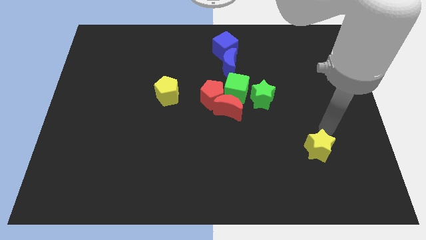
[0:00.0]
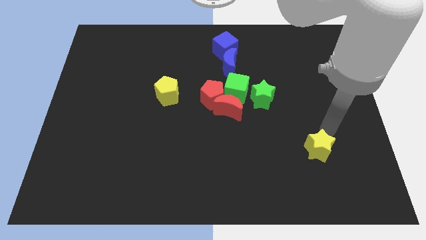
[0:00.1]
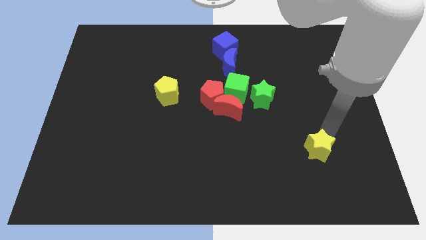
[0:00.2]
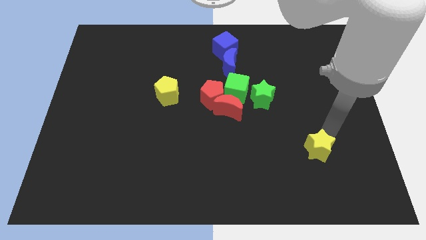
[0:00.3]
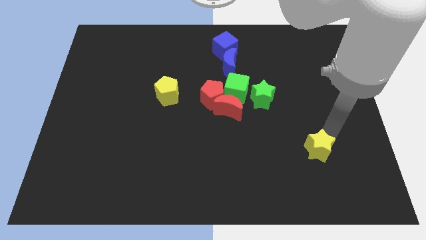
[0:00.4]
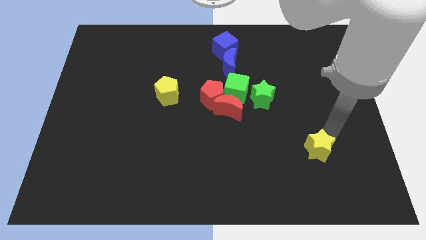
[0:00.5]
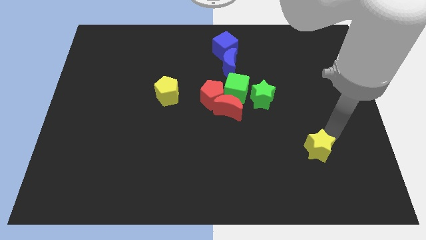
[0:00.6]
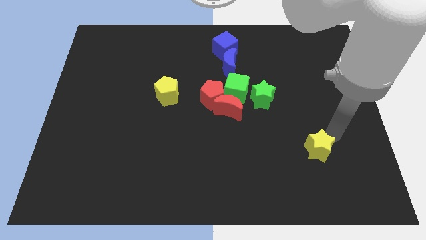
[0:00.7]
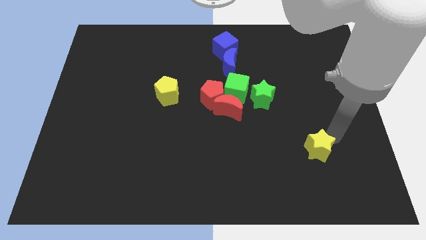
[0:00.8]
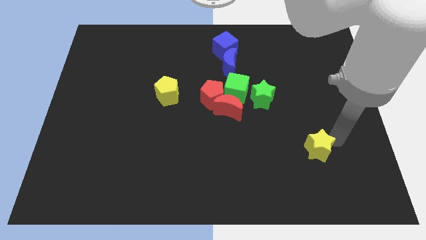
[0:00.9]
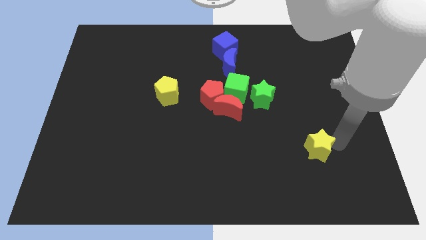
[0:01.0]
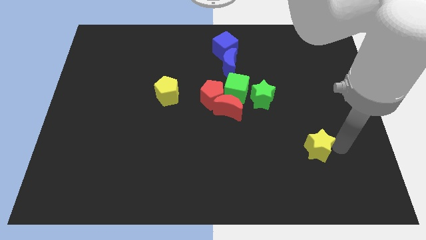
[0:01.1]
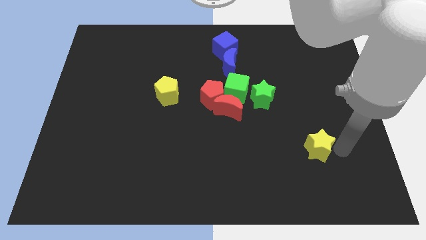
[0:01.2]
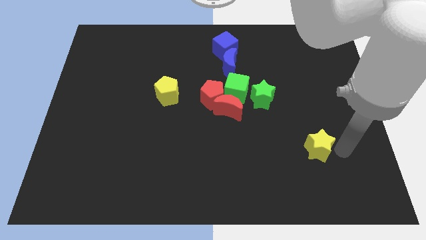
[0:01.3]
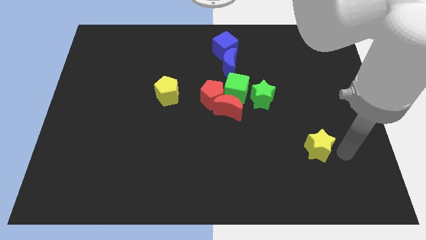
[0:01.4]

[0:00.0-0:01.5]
move the hand on the right side of the yellow star

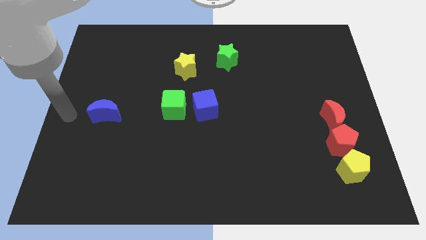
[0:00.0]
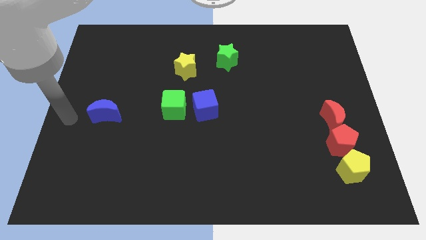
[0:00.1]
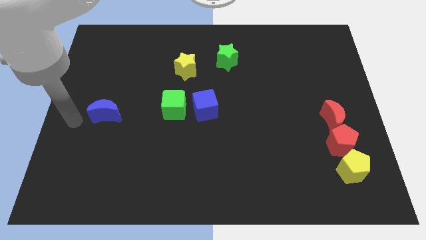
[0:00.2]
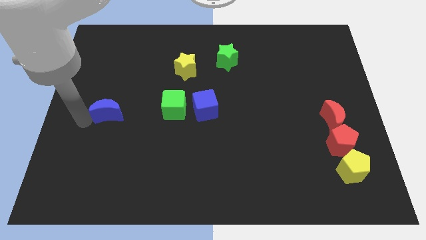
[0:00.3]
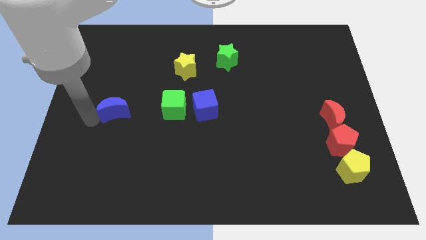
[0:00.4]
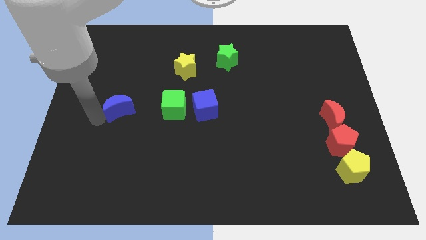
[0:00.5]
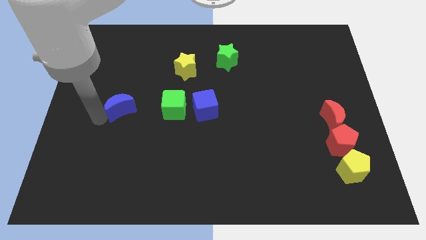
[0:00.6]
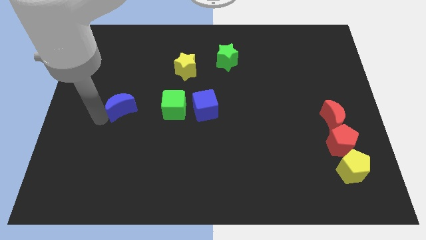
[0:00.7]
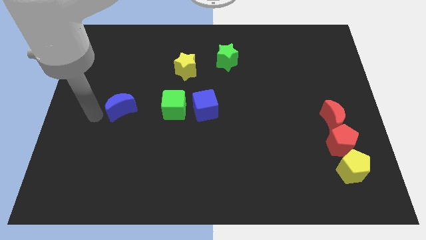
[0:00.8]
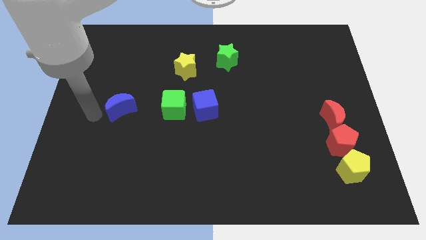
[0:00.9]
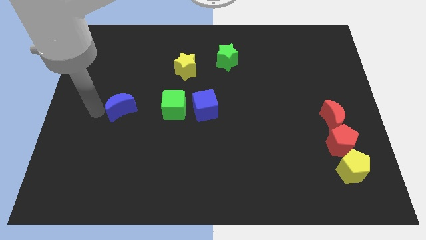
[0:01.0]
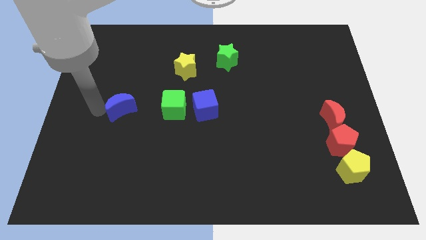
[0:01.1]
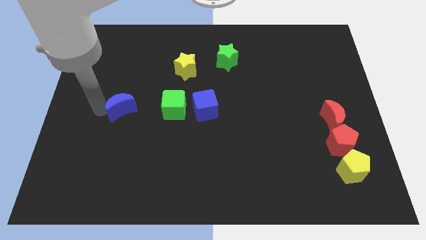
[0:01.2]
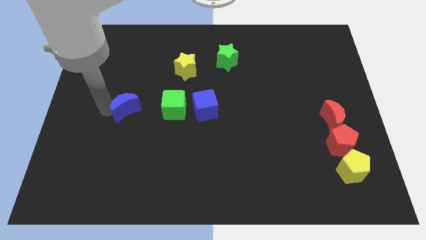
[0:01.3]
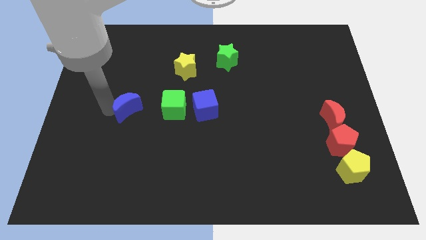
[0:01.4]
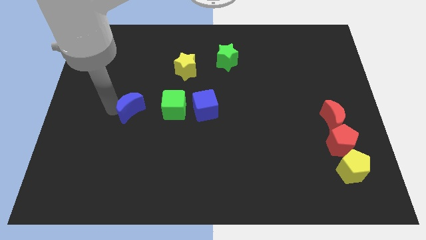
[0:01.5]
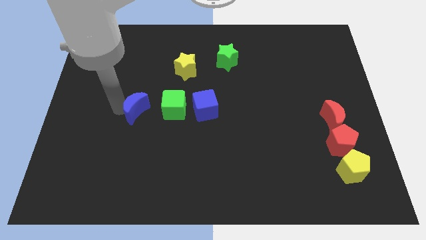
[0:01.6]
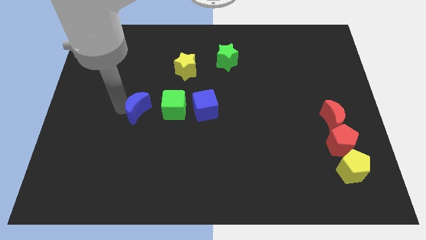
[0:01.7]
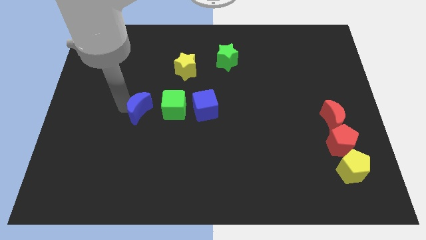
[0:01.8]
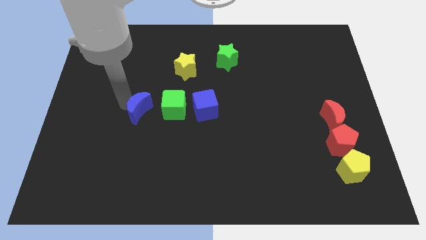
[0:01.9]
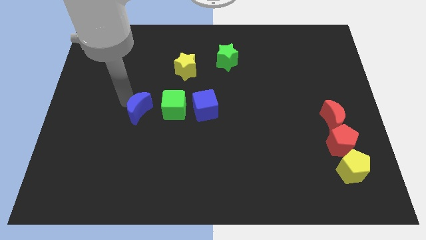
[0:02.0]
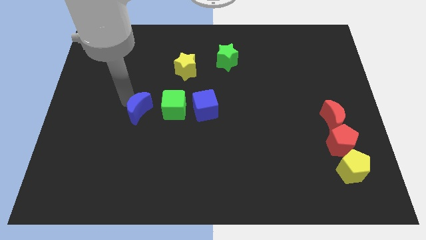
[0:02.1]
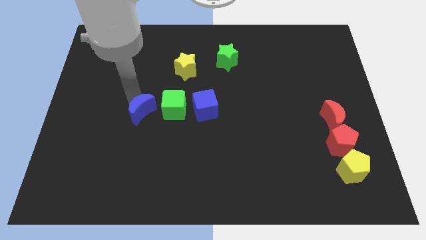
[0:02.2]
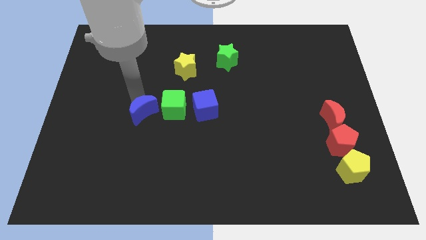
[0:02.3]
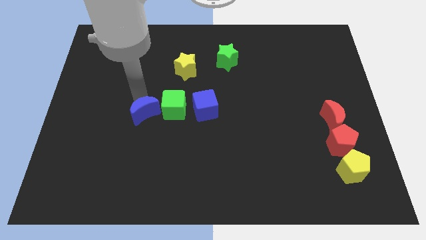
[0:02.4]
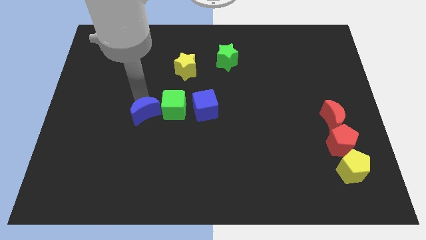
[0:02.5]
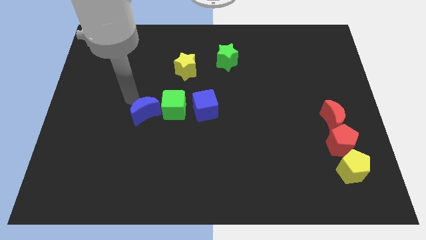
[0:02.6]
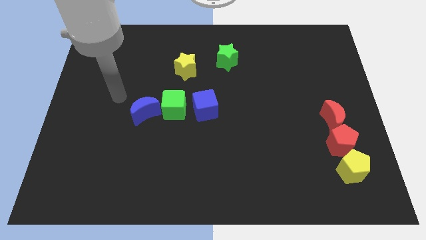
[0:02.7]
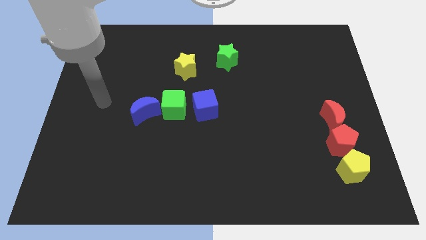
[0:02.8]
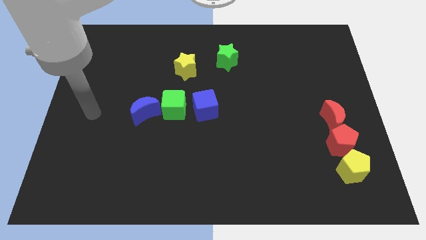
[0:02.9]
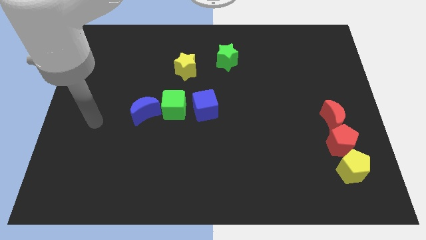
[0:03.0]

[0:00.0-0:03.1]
place the blue crescent close to the green cube

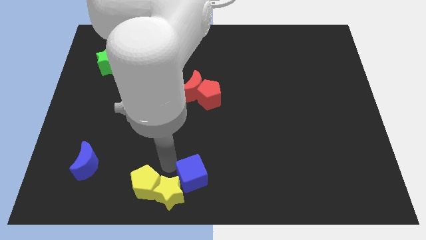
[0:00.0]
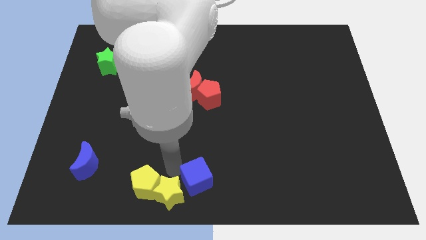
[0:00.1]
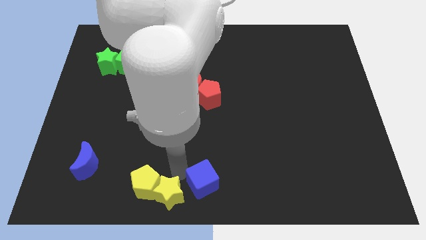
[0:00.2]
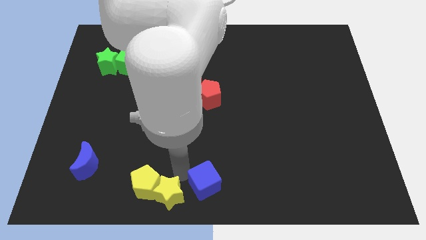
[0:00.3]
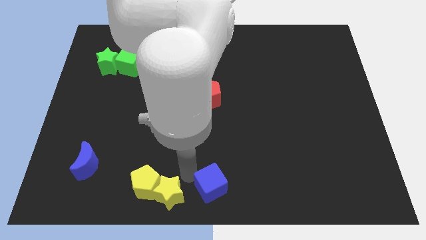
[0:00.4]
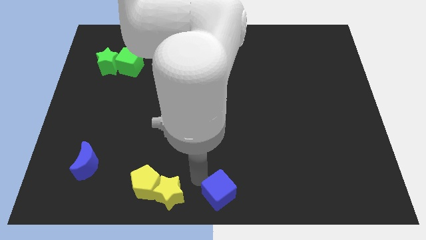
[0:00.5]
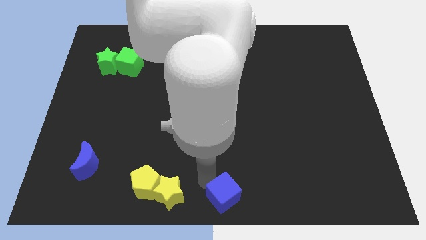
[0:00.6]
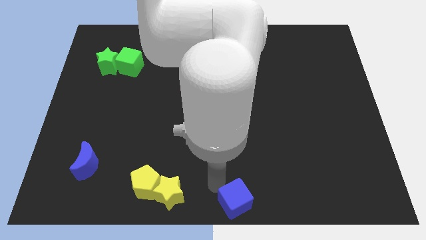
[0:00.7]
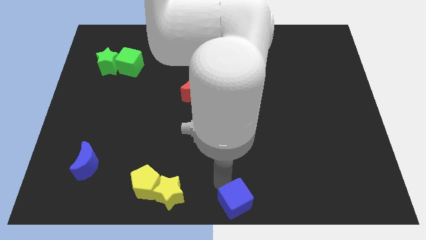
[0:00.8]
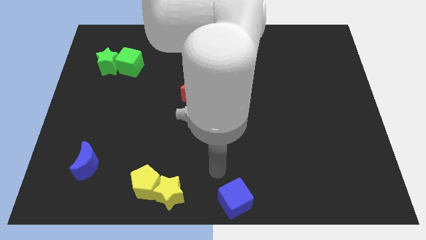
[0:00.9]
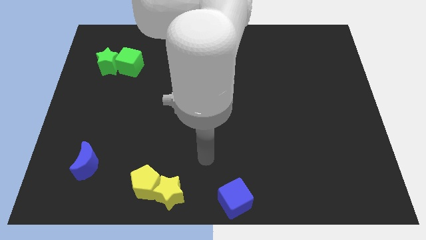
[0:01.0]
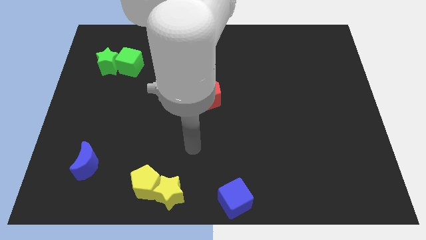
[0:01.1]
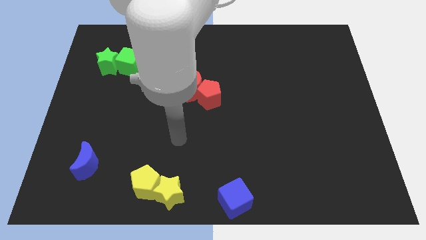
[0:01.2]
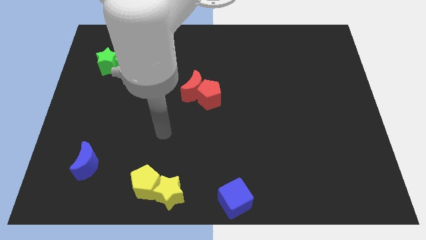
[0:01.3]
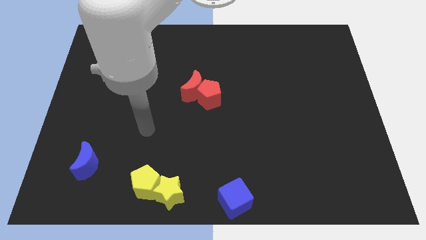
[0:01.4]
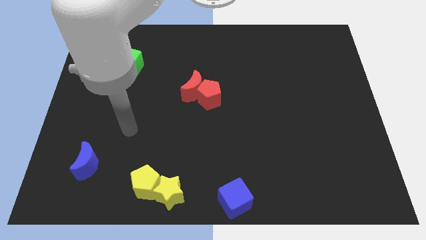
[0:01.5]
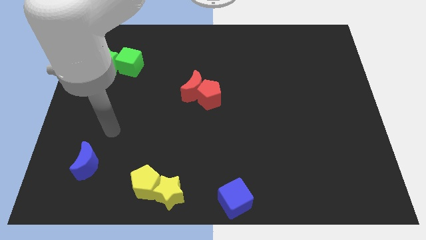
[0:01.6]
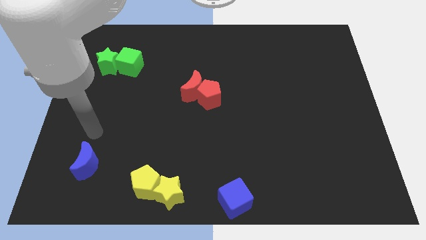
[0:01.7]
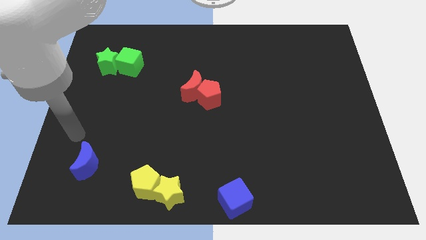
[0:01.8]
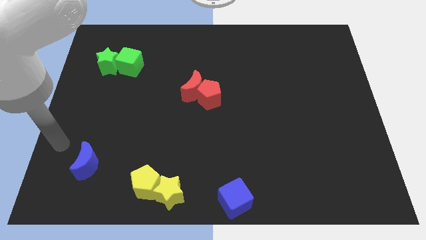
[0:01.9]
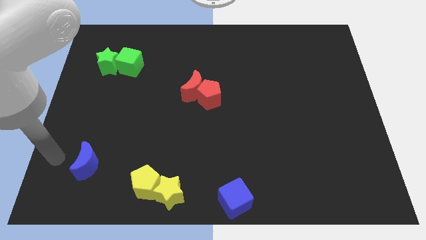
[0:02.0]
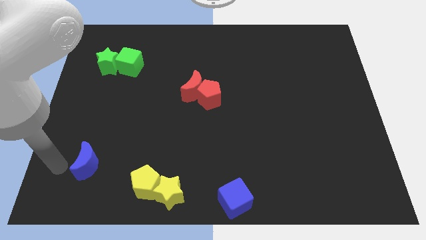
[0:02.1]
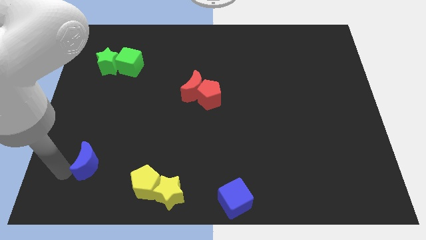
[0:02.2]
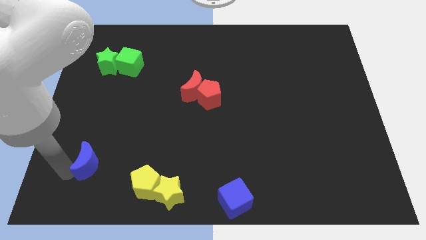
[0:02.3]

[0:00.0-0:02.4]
move the arm away and place it on the left of the blue moon

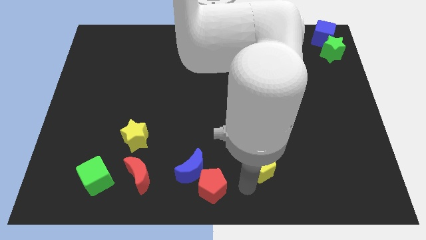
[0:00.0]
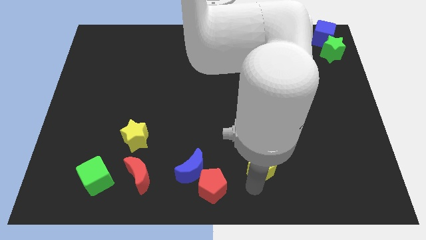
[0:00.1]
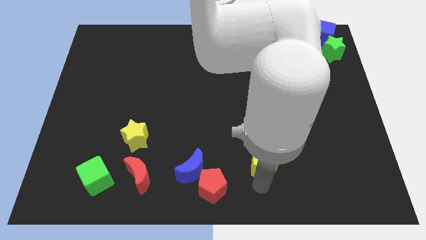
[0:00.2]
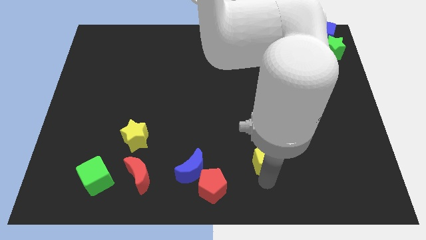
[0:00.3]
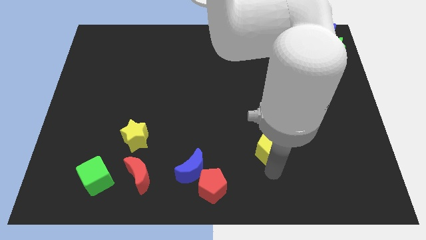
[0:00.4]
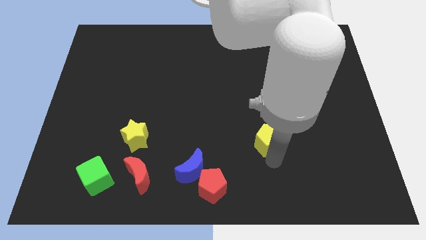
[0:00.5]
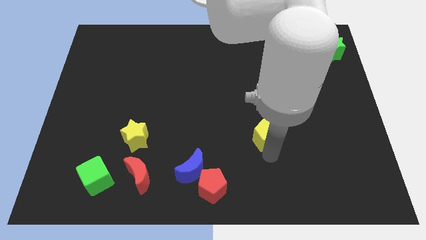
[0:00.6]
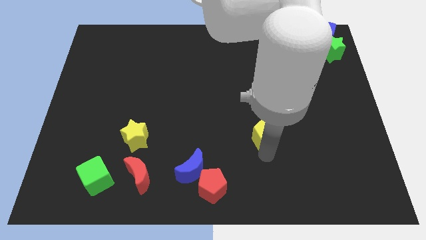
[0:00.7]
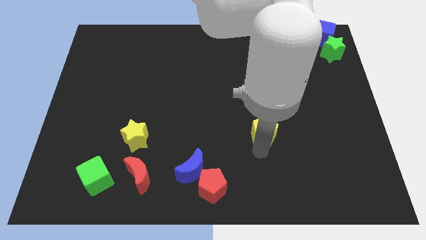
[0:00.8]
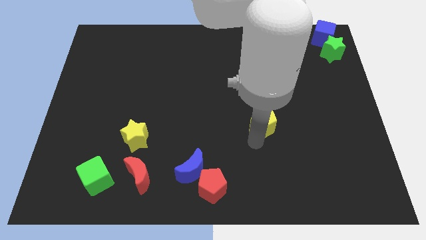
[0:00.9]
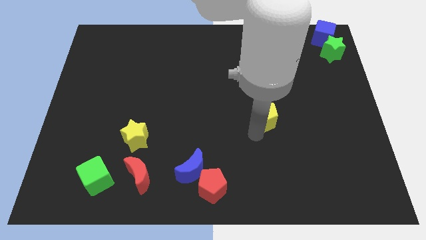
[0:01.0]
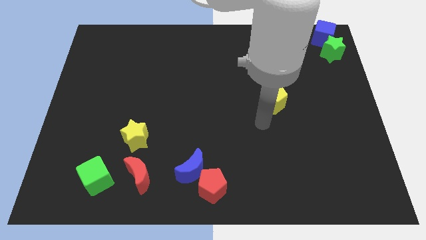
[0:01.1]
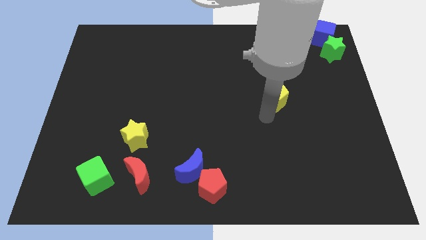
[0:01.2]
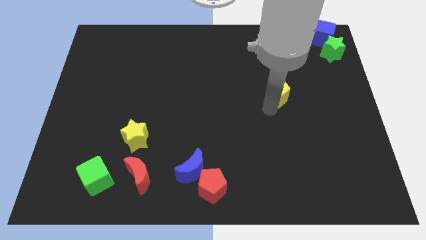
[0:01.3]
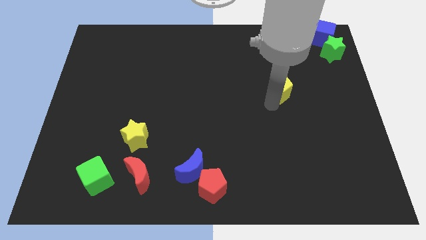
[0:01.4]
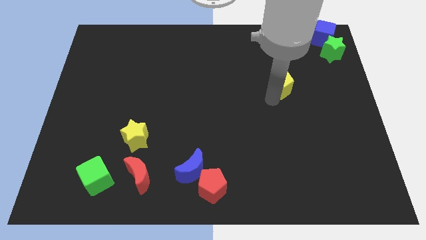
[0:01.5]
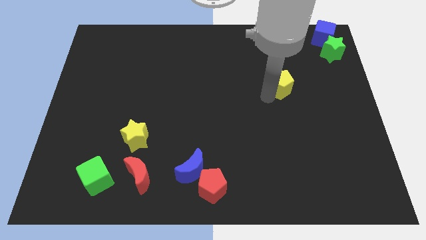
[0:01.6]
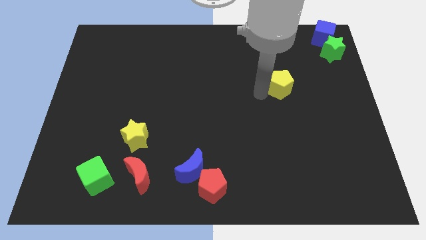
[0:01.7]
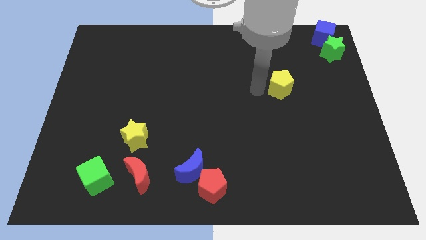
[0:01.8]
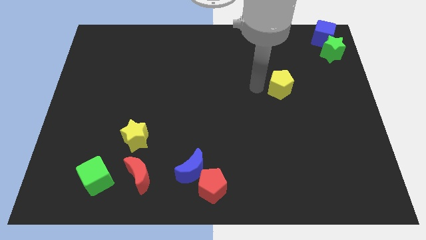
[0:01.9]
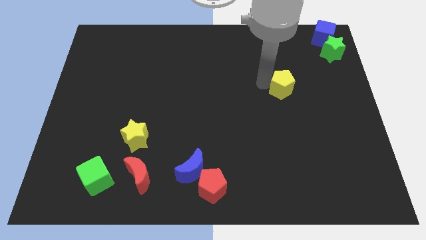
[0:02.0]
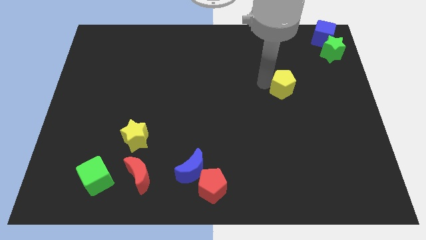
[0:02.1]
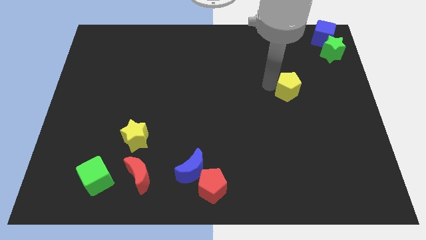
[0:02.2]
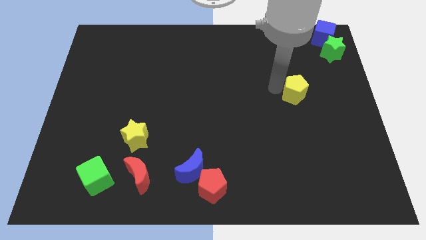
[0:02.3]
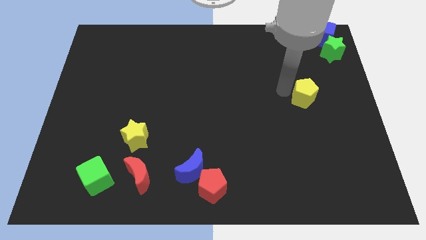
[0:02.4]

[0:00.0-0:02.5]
move the yellow pentagon to the bottom left of the green star
